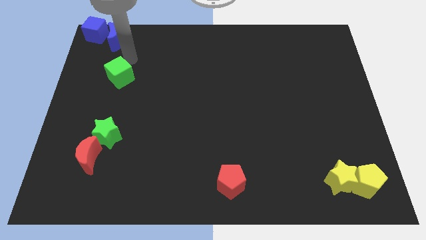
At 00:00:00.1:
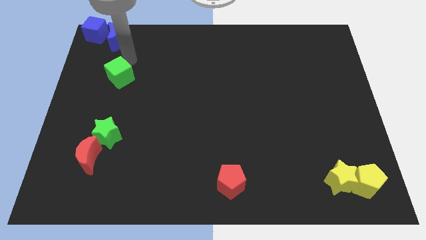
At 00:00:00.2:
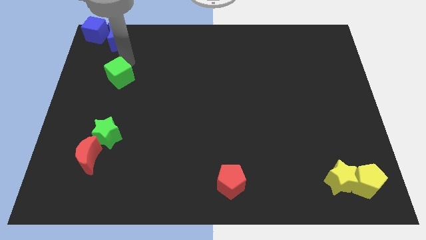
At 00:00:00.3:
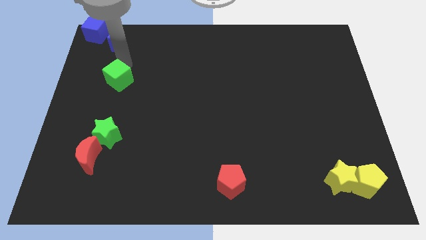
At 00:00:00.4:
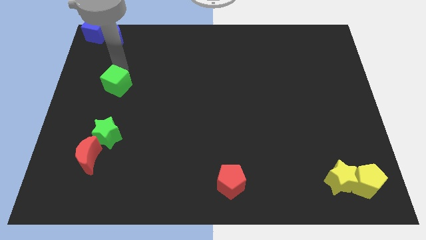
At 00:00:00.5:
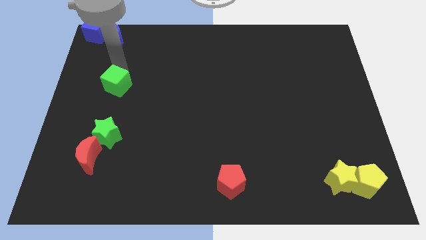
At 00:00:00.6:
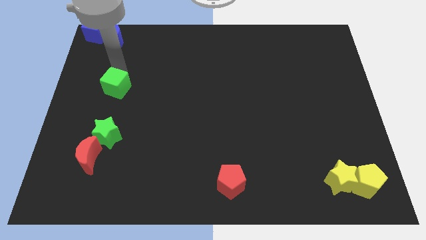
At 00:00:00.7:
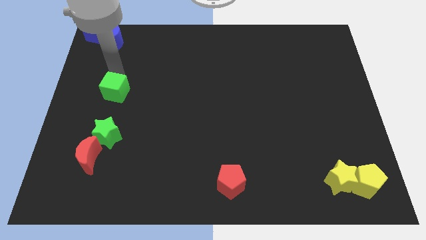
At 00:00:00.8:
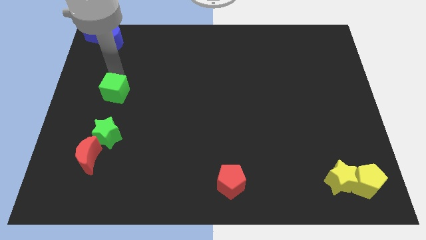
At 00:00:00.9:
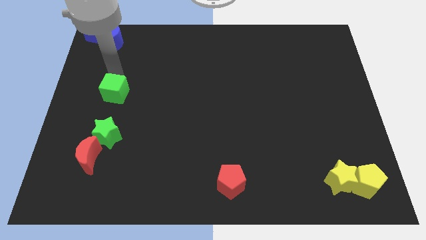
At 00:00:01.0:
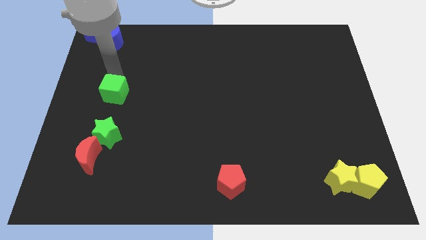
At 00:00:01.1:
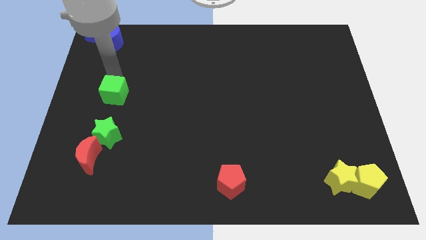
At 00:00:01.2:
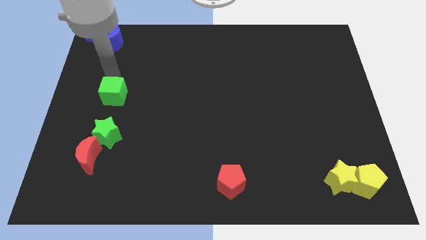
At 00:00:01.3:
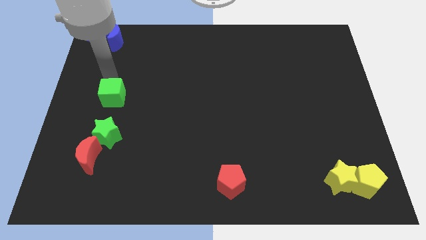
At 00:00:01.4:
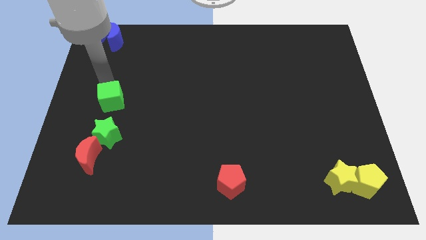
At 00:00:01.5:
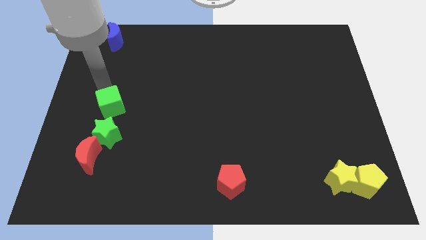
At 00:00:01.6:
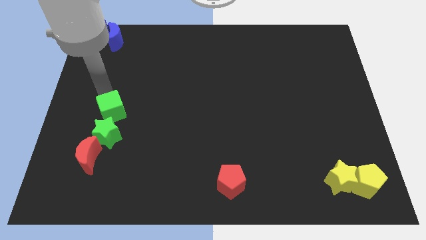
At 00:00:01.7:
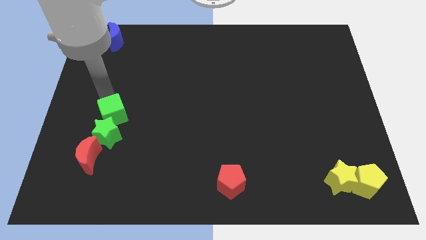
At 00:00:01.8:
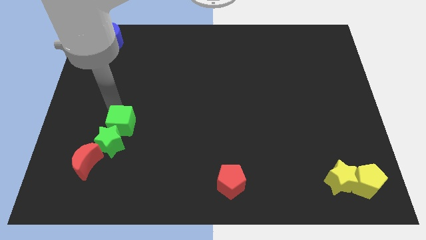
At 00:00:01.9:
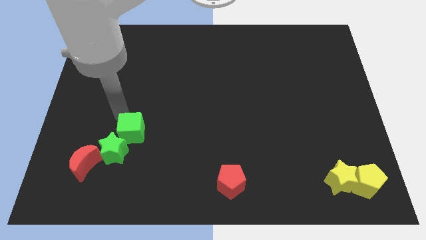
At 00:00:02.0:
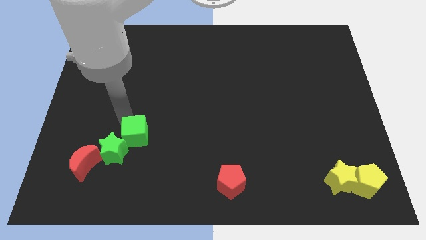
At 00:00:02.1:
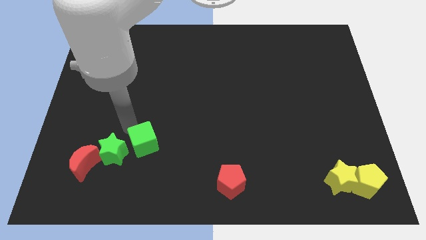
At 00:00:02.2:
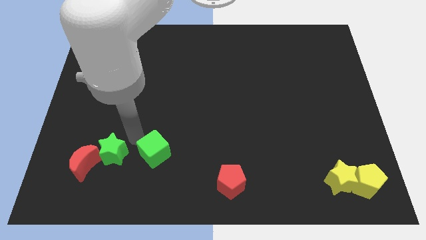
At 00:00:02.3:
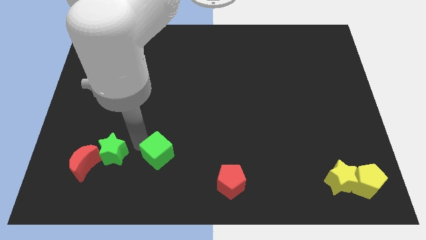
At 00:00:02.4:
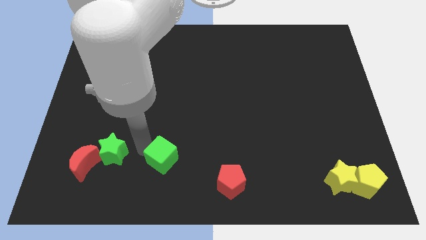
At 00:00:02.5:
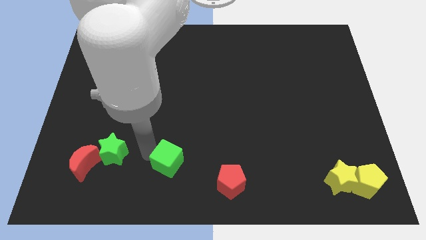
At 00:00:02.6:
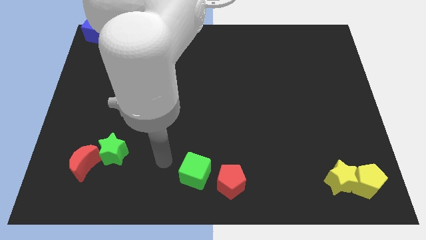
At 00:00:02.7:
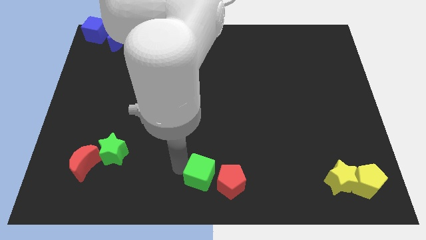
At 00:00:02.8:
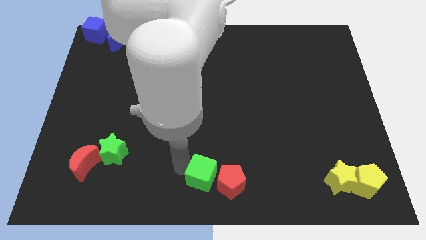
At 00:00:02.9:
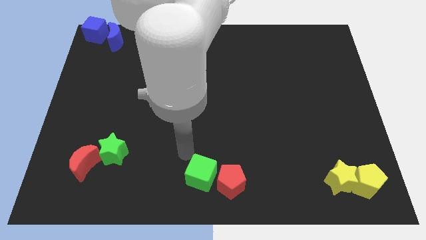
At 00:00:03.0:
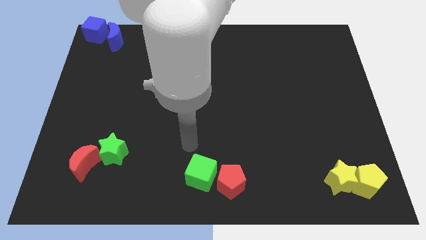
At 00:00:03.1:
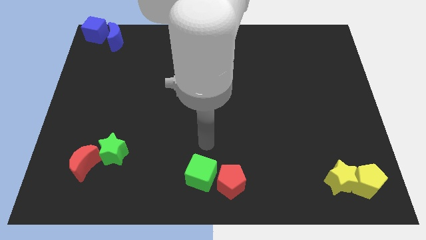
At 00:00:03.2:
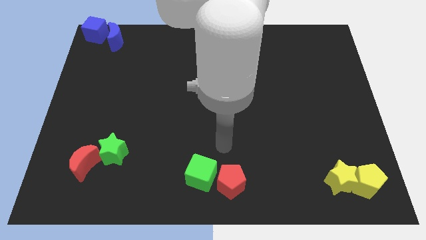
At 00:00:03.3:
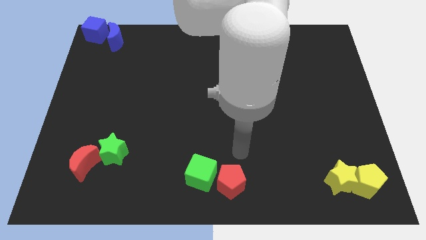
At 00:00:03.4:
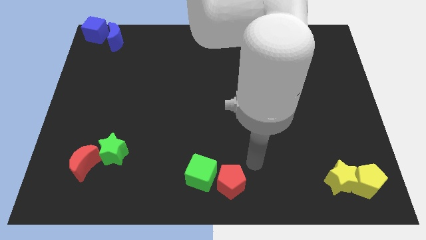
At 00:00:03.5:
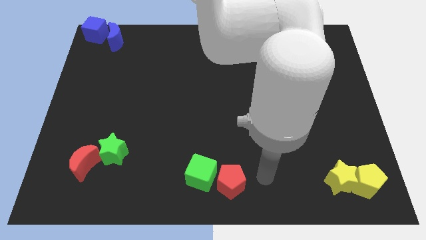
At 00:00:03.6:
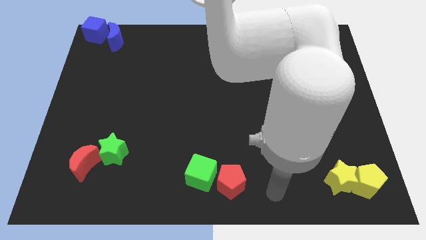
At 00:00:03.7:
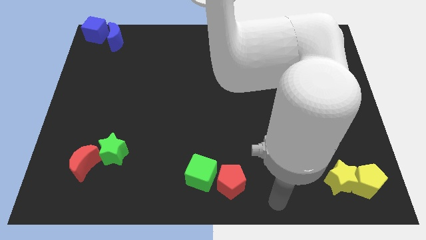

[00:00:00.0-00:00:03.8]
move the green cube left beside the red pentagon

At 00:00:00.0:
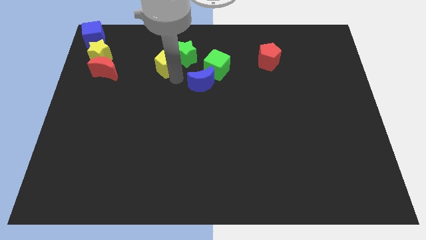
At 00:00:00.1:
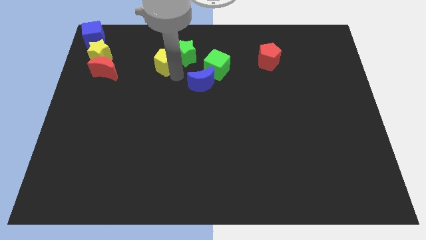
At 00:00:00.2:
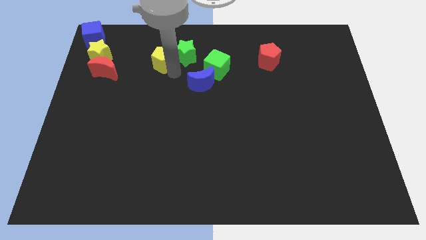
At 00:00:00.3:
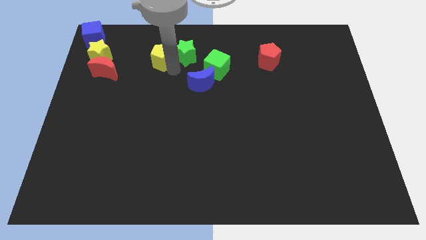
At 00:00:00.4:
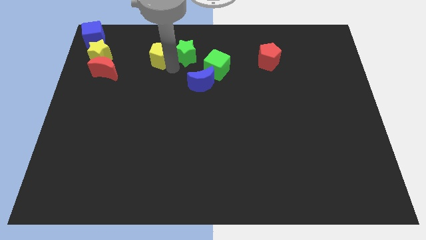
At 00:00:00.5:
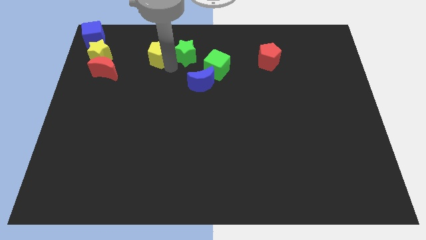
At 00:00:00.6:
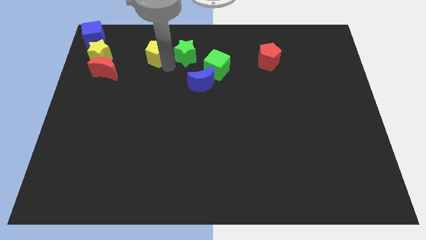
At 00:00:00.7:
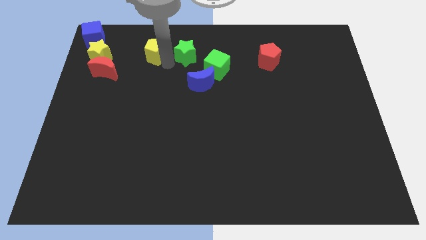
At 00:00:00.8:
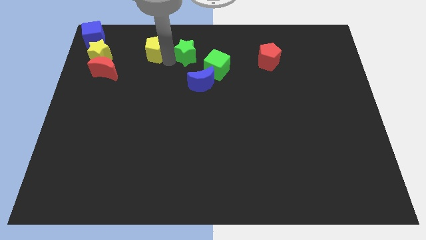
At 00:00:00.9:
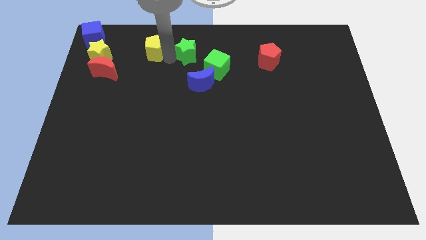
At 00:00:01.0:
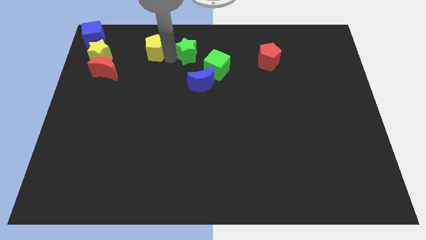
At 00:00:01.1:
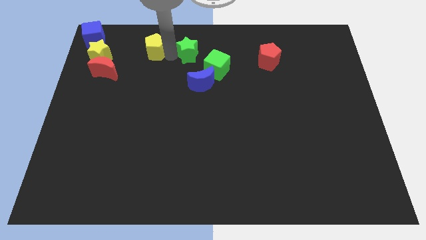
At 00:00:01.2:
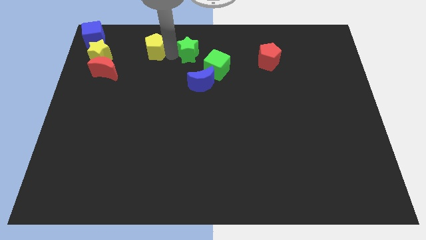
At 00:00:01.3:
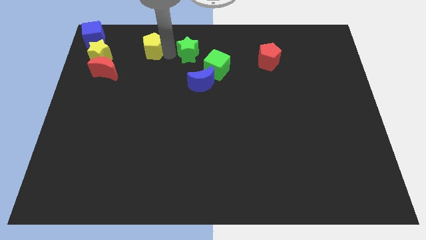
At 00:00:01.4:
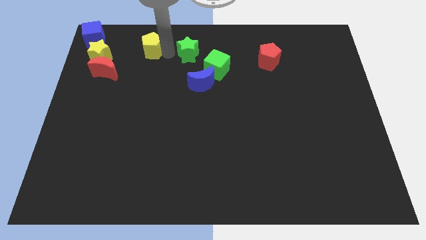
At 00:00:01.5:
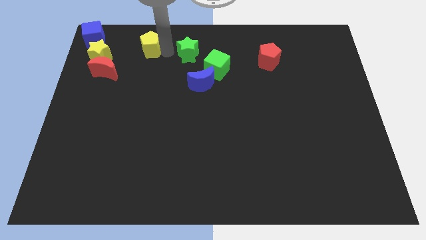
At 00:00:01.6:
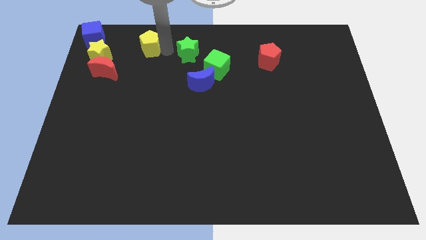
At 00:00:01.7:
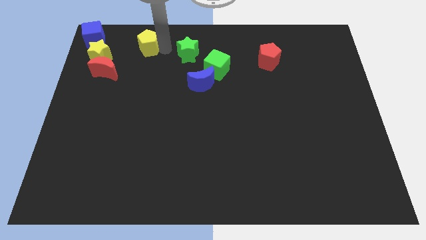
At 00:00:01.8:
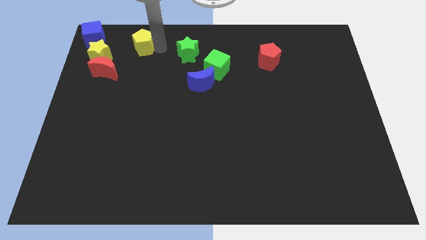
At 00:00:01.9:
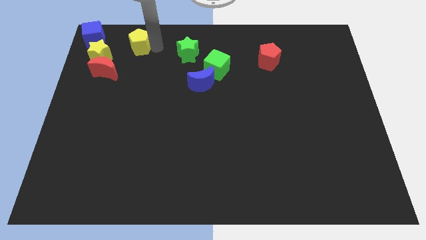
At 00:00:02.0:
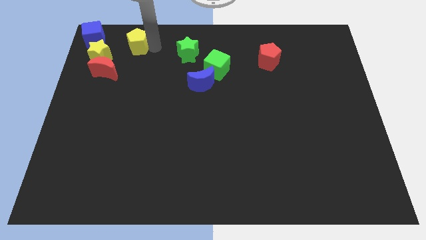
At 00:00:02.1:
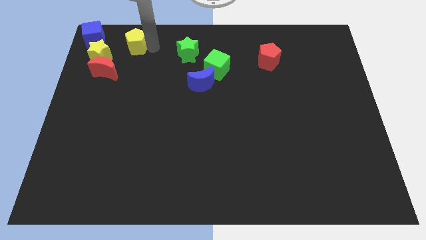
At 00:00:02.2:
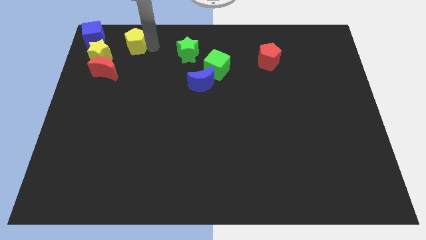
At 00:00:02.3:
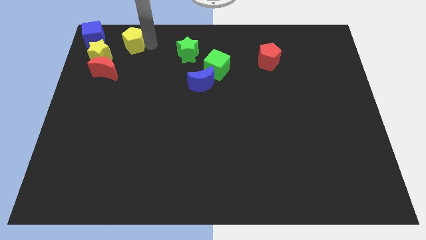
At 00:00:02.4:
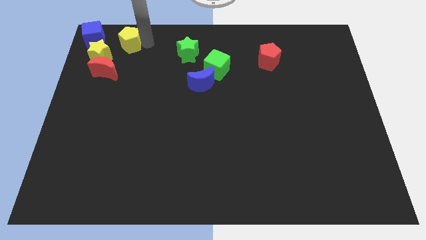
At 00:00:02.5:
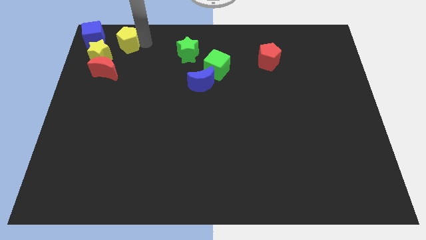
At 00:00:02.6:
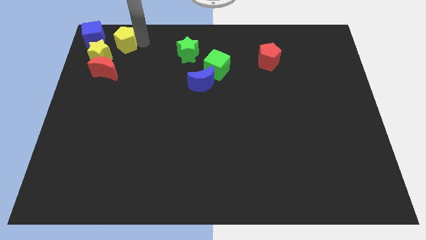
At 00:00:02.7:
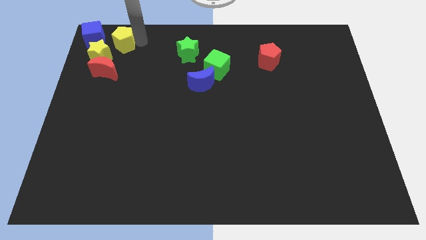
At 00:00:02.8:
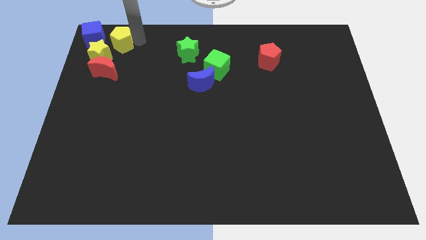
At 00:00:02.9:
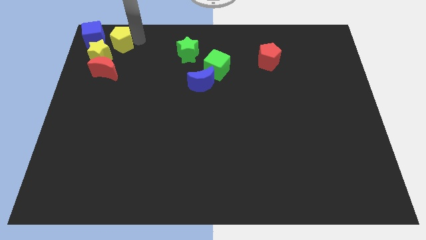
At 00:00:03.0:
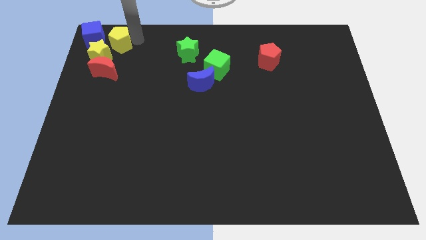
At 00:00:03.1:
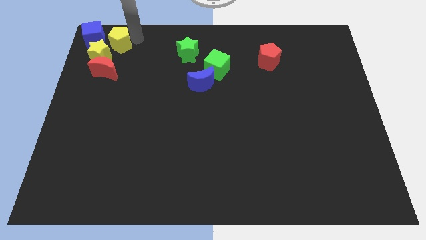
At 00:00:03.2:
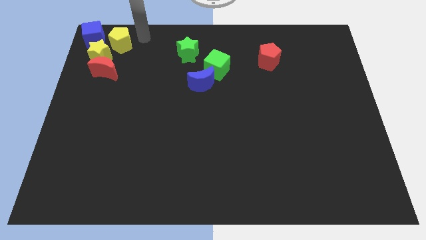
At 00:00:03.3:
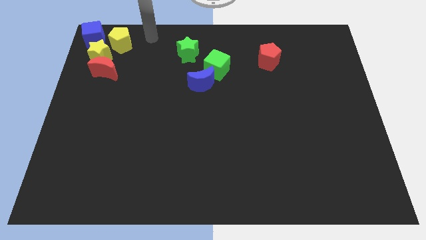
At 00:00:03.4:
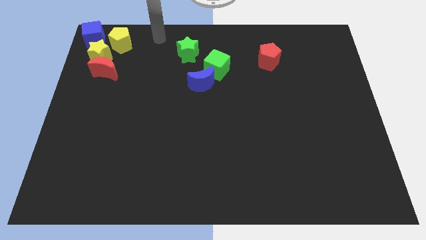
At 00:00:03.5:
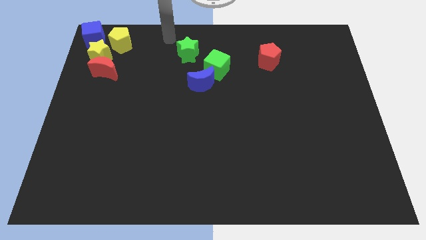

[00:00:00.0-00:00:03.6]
move yellow pentagon towards blue cube

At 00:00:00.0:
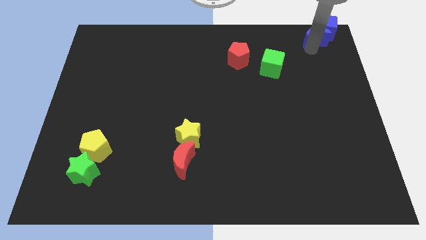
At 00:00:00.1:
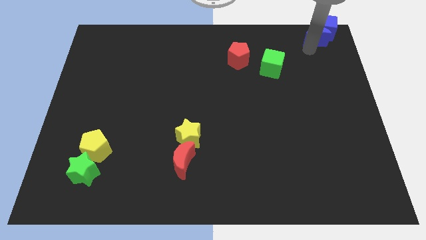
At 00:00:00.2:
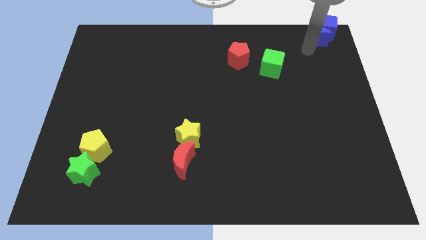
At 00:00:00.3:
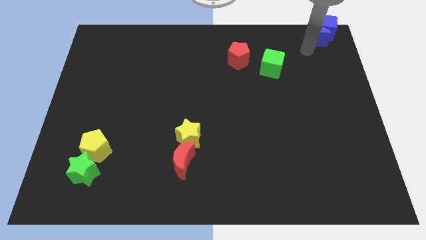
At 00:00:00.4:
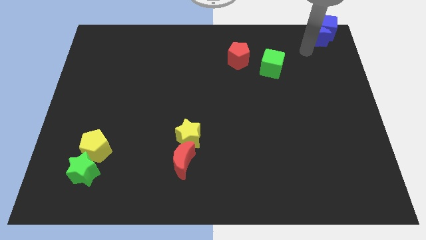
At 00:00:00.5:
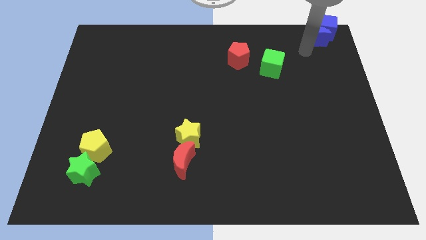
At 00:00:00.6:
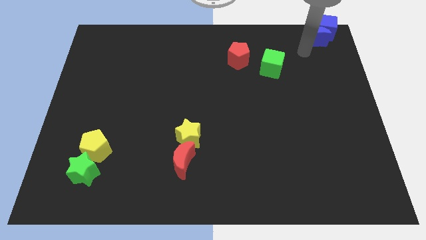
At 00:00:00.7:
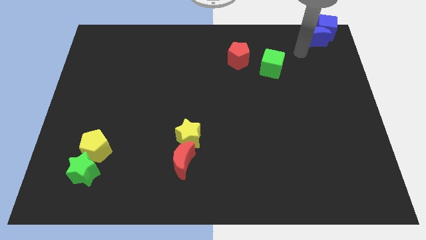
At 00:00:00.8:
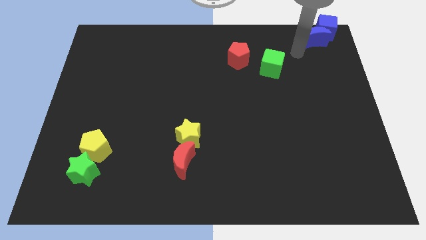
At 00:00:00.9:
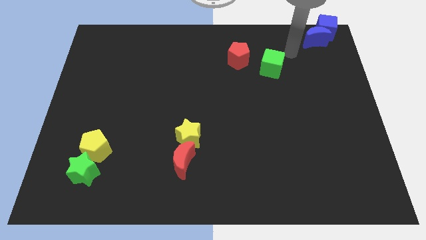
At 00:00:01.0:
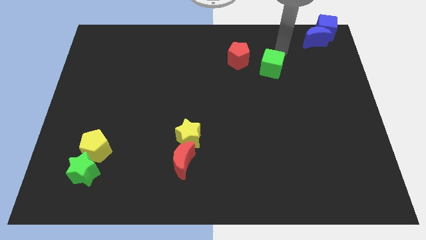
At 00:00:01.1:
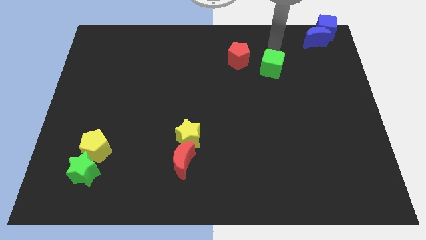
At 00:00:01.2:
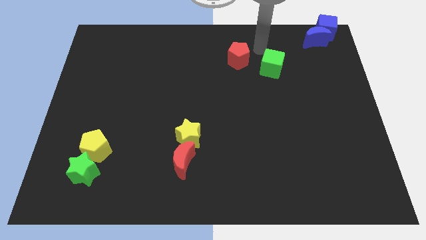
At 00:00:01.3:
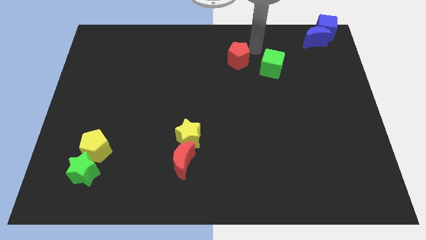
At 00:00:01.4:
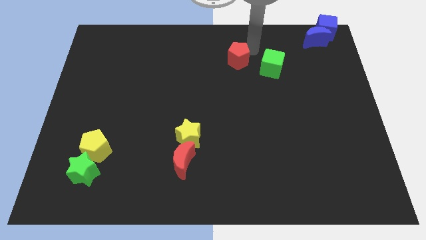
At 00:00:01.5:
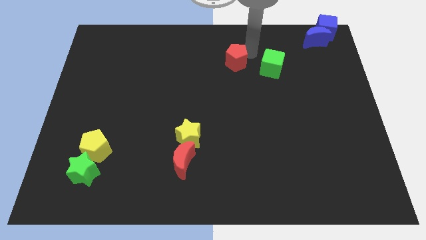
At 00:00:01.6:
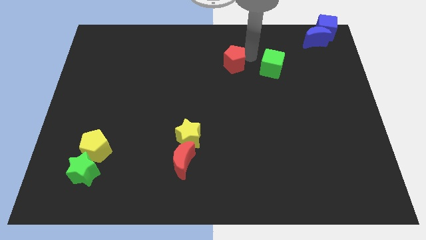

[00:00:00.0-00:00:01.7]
point your arm at the top of red pentagon
